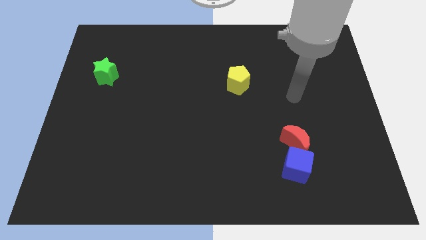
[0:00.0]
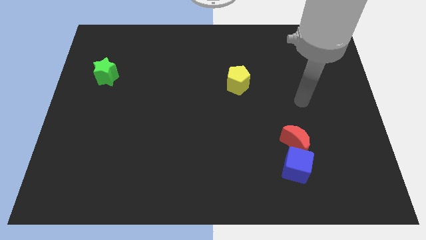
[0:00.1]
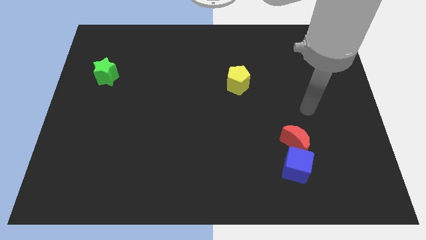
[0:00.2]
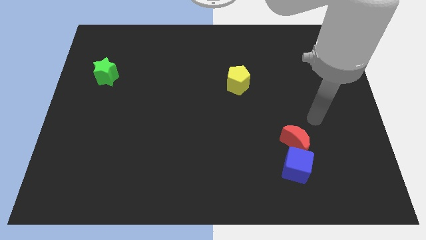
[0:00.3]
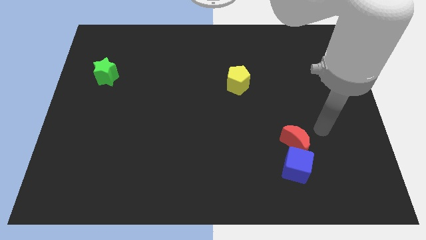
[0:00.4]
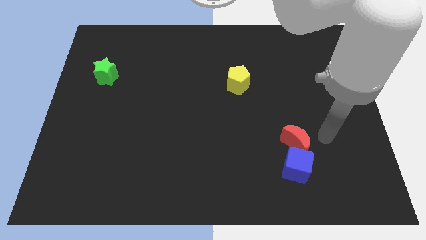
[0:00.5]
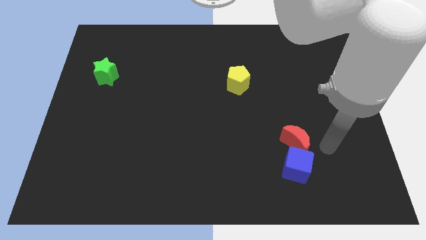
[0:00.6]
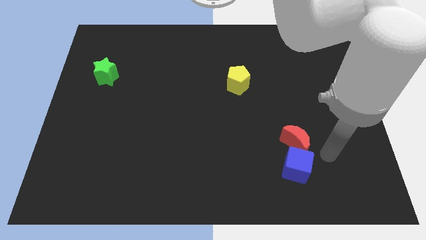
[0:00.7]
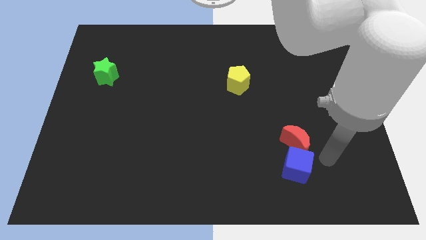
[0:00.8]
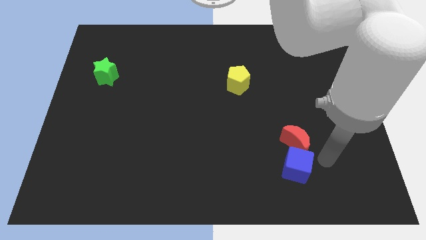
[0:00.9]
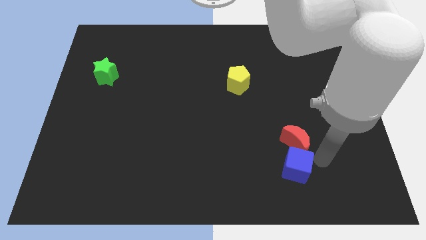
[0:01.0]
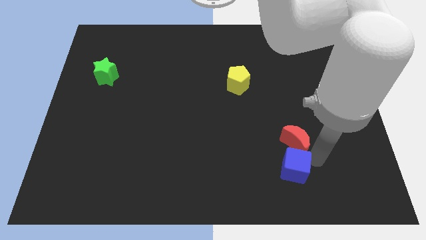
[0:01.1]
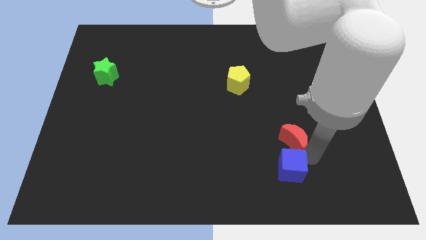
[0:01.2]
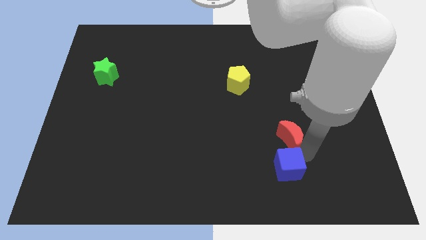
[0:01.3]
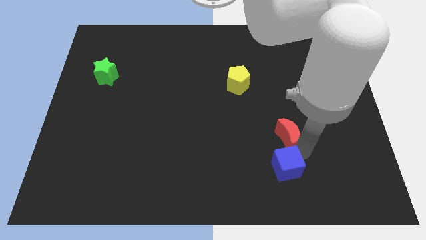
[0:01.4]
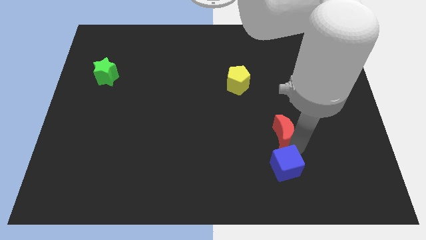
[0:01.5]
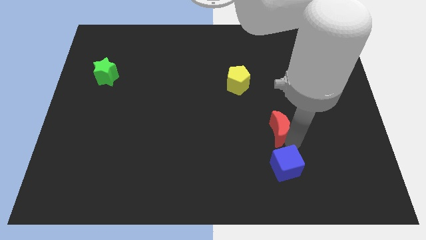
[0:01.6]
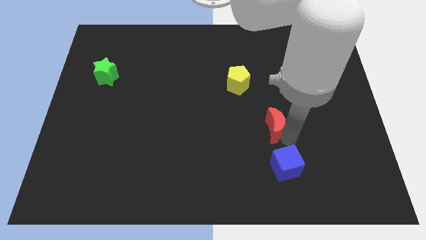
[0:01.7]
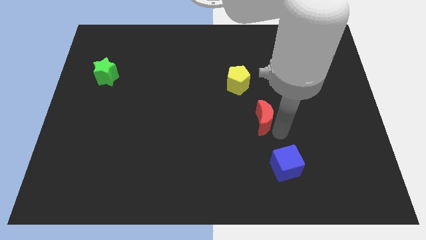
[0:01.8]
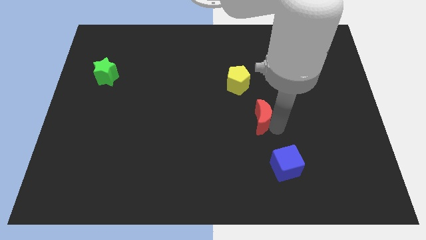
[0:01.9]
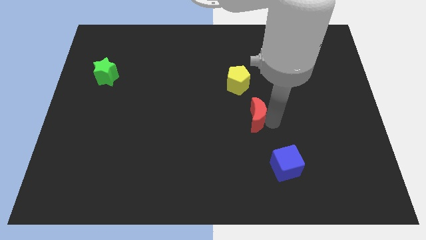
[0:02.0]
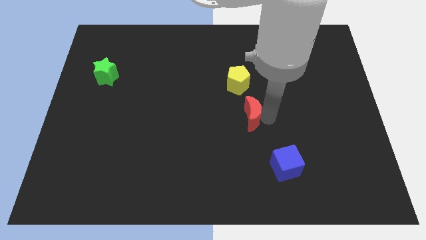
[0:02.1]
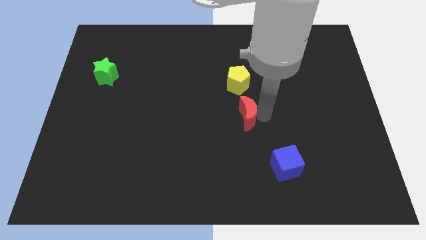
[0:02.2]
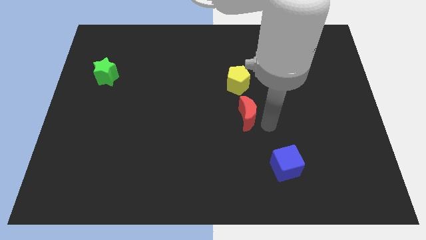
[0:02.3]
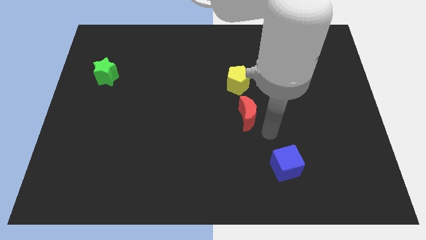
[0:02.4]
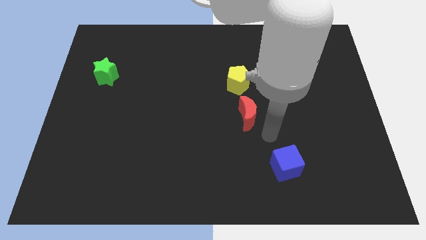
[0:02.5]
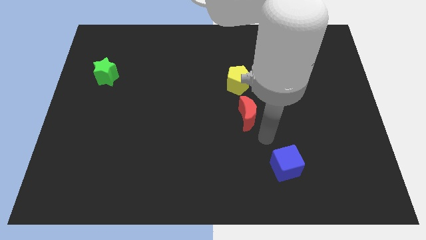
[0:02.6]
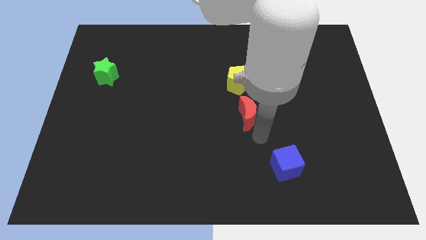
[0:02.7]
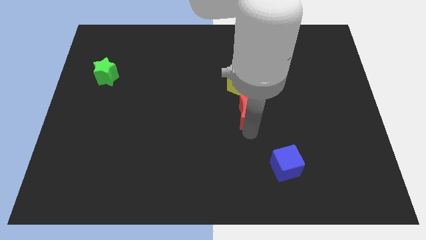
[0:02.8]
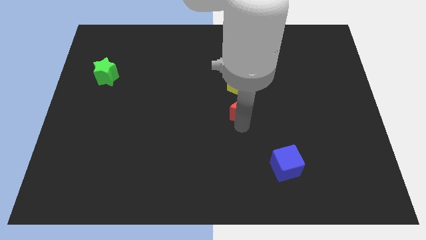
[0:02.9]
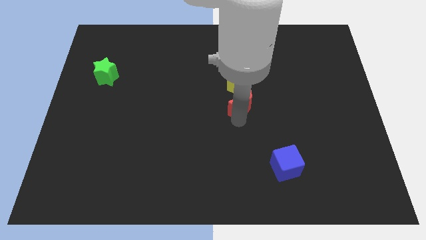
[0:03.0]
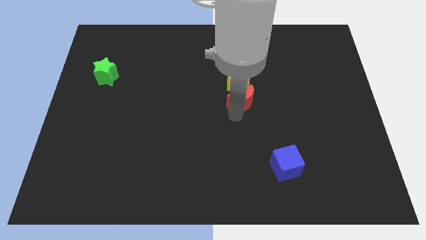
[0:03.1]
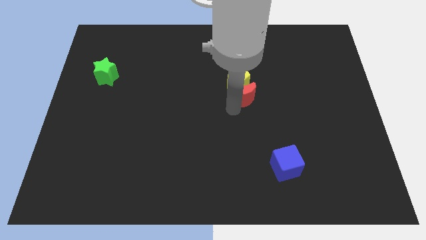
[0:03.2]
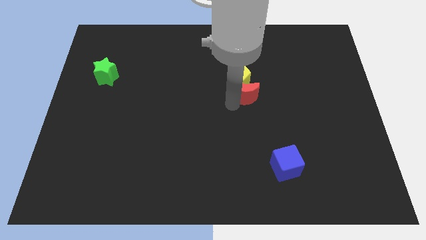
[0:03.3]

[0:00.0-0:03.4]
move the red moon close to the yellow pentagon

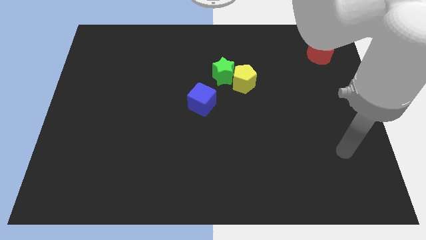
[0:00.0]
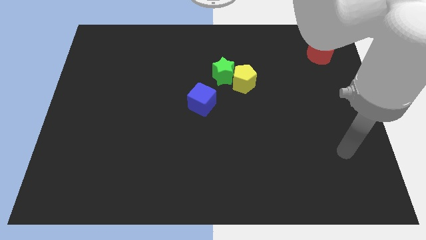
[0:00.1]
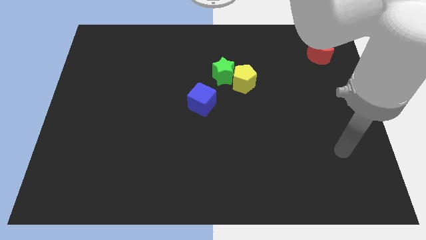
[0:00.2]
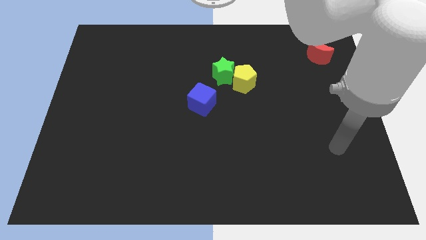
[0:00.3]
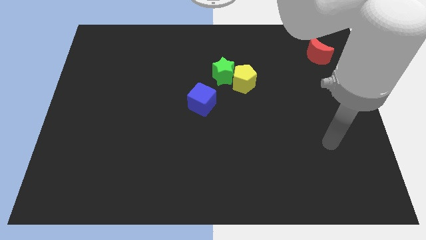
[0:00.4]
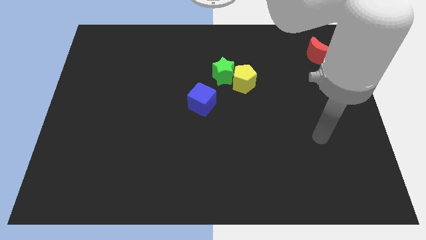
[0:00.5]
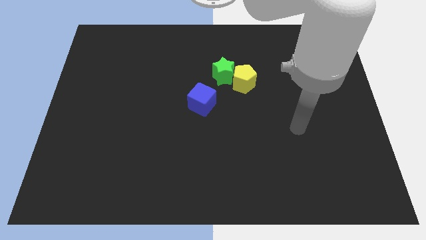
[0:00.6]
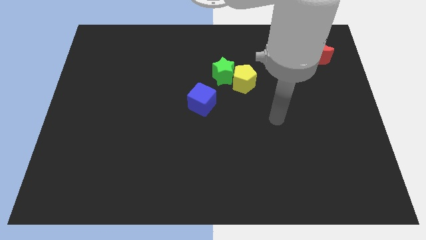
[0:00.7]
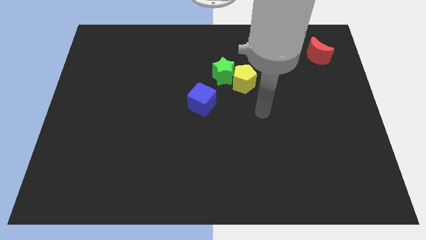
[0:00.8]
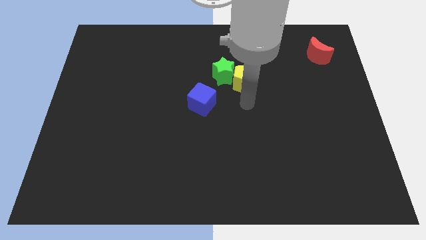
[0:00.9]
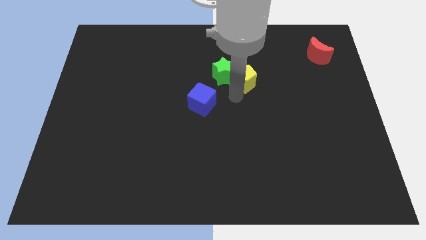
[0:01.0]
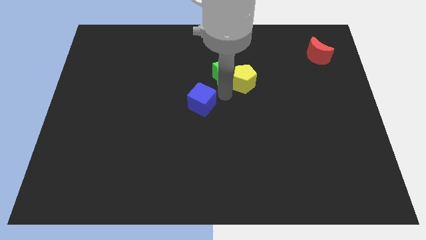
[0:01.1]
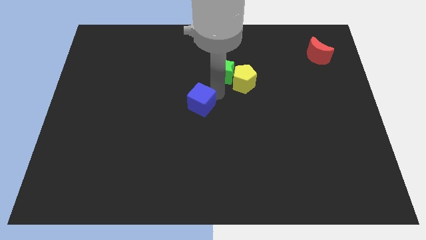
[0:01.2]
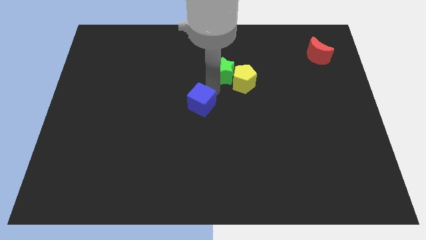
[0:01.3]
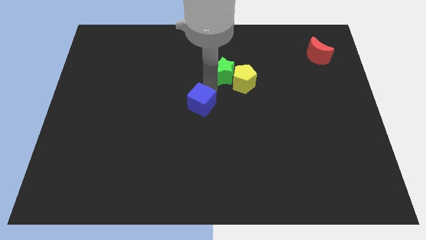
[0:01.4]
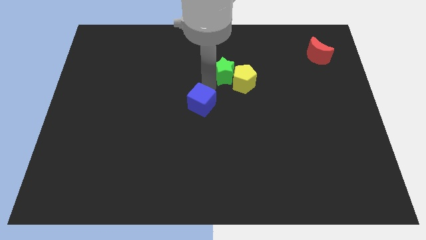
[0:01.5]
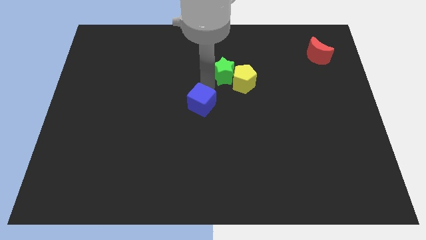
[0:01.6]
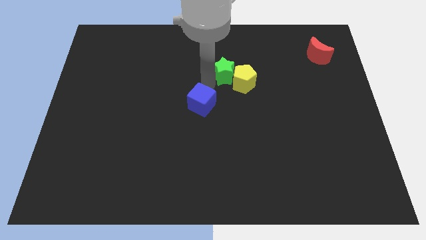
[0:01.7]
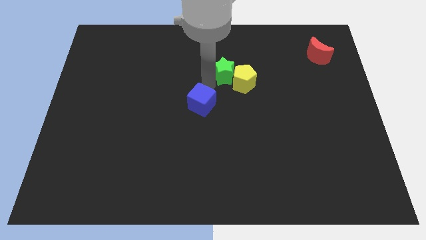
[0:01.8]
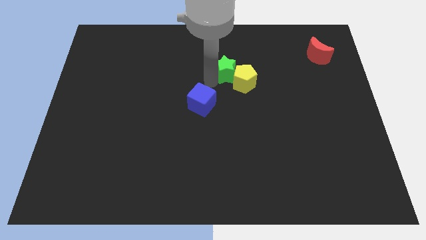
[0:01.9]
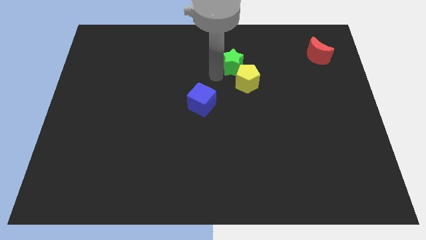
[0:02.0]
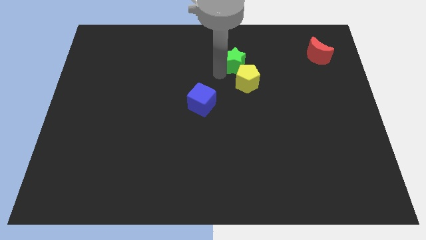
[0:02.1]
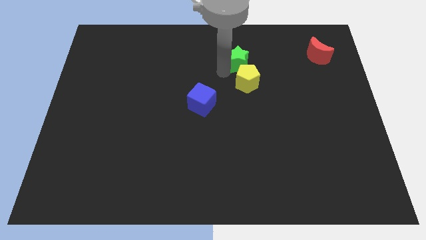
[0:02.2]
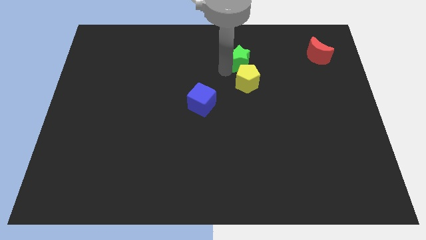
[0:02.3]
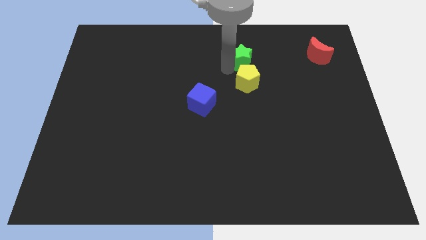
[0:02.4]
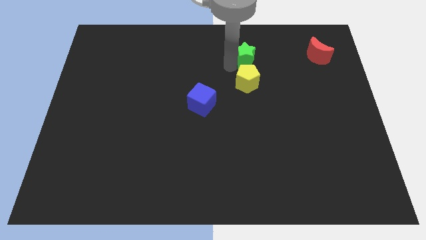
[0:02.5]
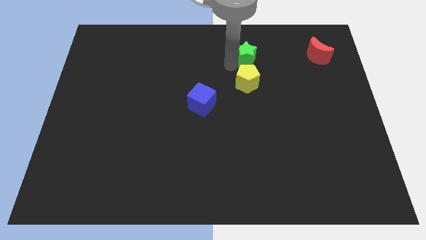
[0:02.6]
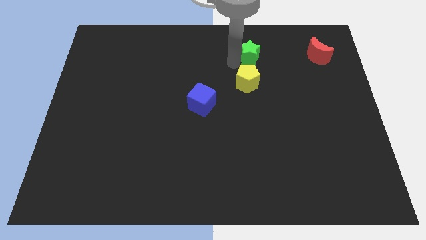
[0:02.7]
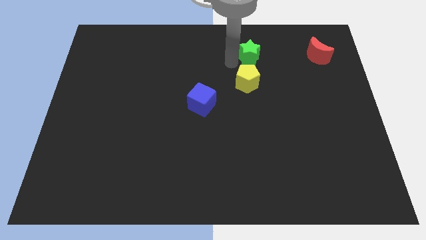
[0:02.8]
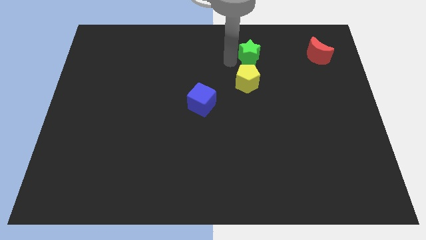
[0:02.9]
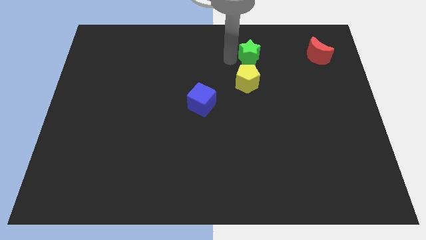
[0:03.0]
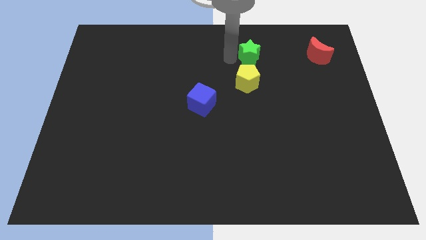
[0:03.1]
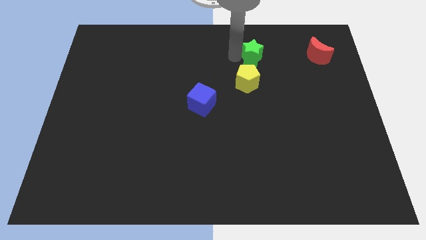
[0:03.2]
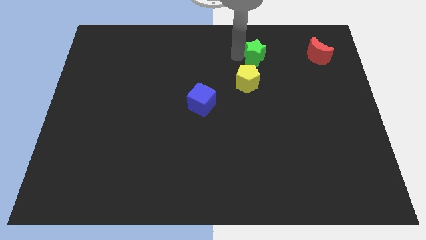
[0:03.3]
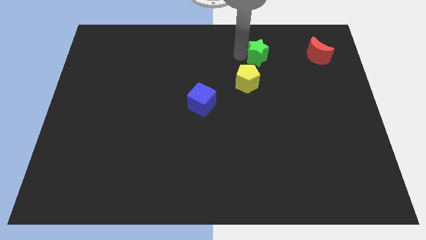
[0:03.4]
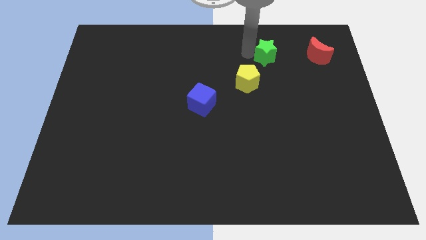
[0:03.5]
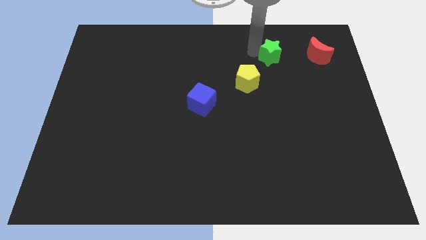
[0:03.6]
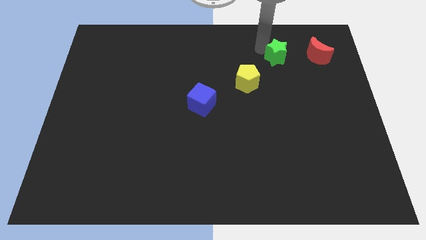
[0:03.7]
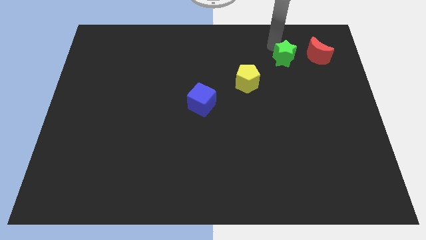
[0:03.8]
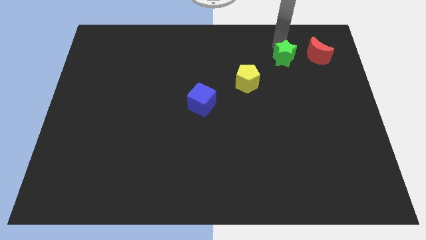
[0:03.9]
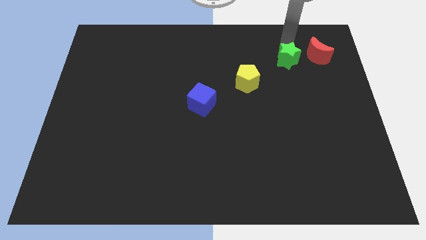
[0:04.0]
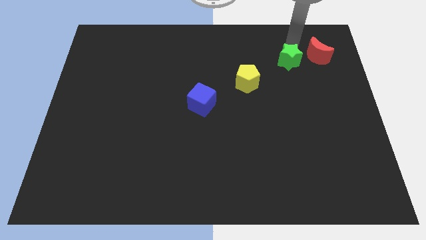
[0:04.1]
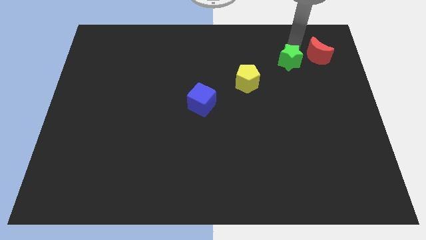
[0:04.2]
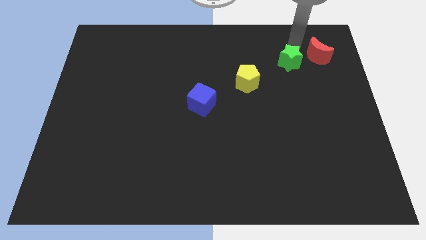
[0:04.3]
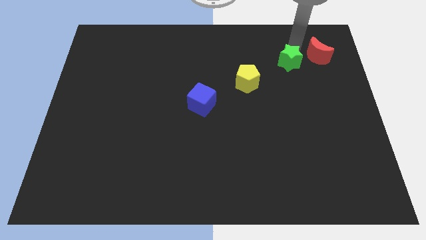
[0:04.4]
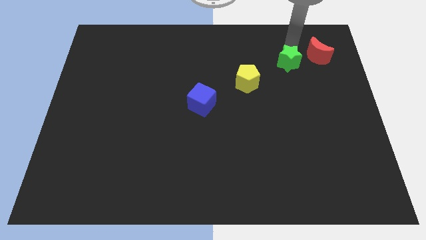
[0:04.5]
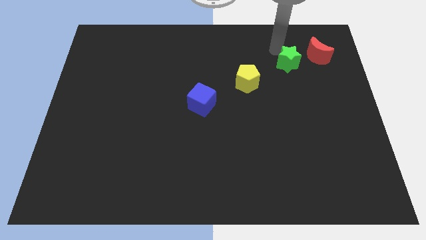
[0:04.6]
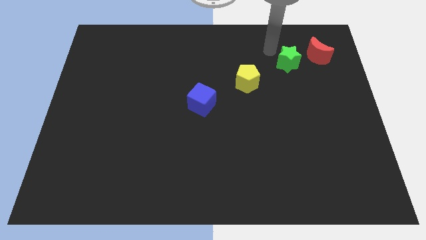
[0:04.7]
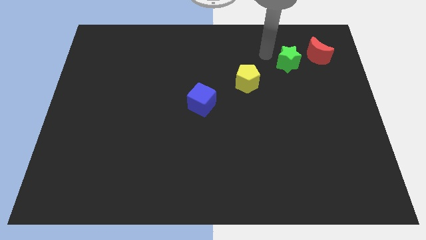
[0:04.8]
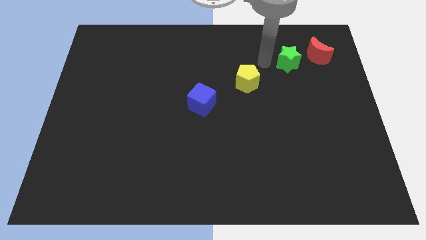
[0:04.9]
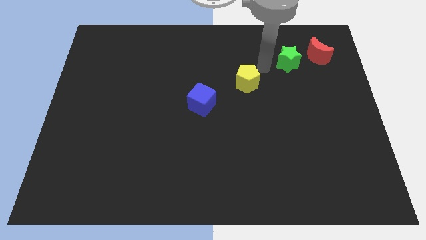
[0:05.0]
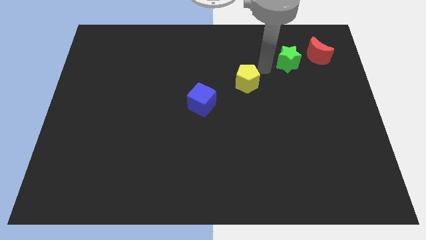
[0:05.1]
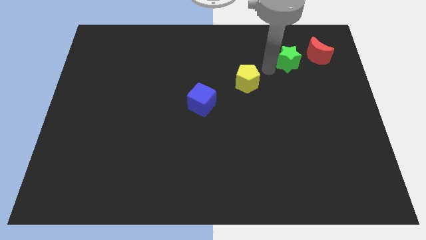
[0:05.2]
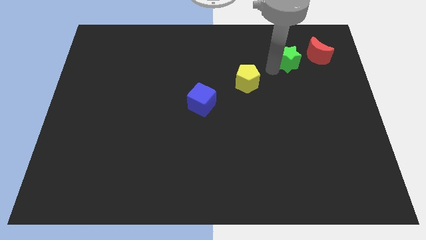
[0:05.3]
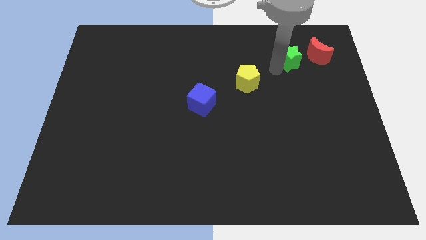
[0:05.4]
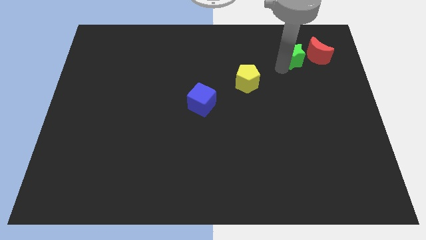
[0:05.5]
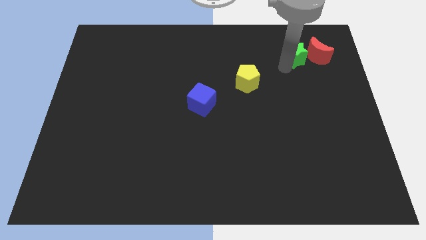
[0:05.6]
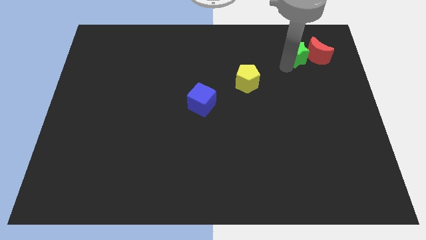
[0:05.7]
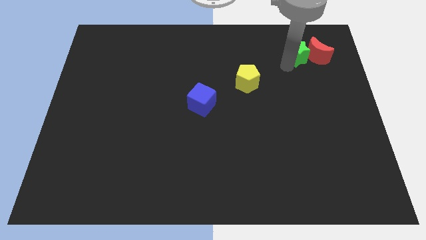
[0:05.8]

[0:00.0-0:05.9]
slide the green star to the red block
